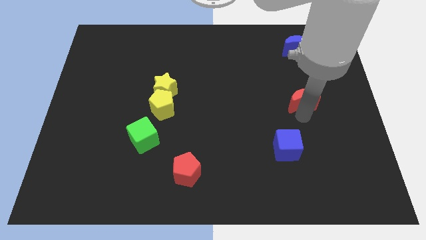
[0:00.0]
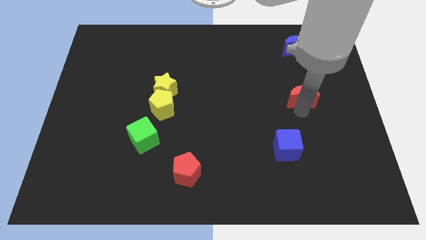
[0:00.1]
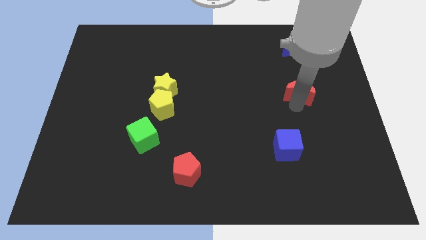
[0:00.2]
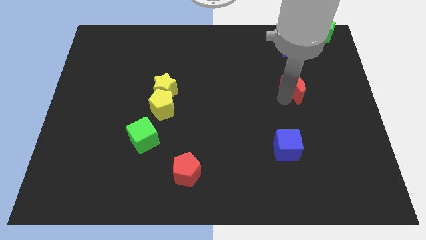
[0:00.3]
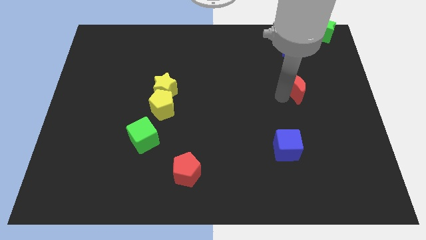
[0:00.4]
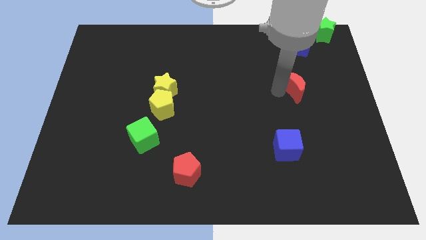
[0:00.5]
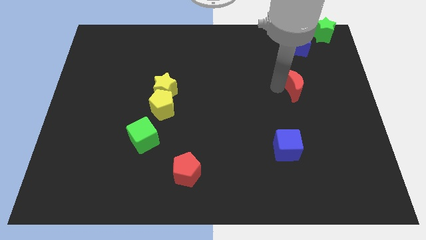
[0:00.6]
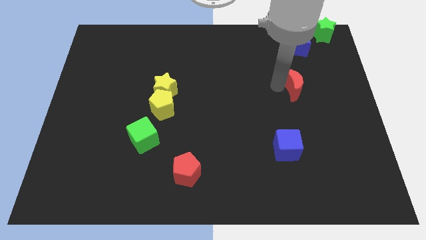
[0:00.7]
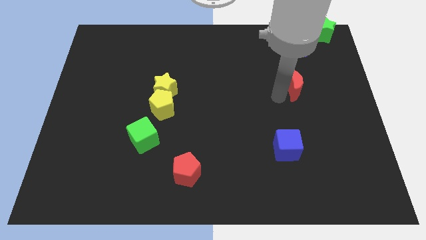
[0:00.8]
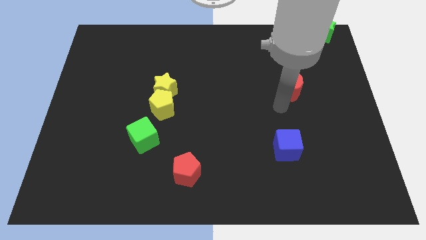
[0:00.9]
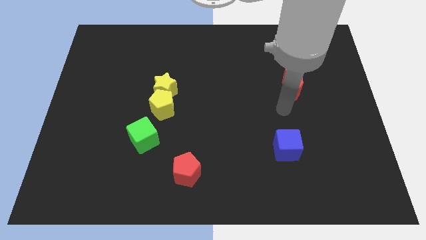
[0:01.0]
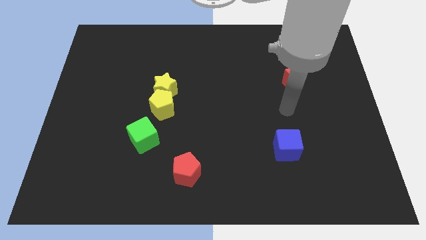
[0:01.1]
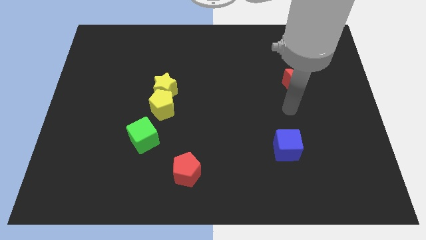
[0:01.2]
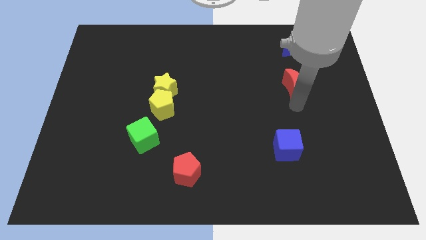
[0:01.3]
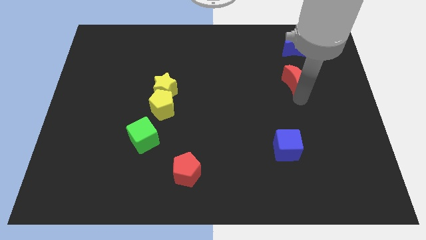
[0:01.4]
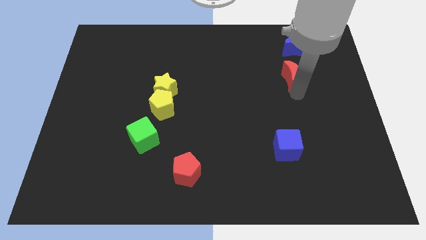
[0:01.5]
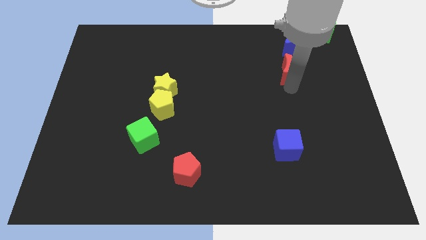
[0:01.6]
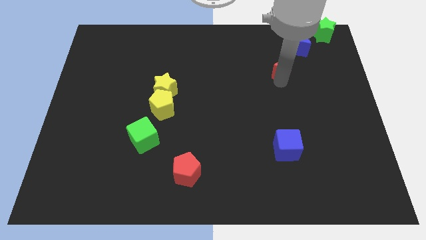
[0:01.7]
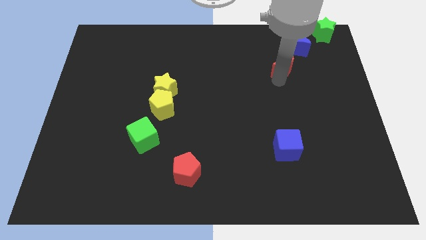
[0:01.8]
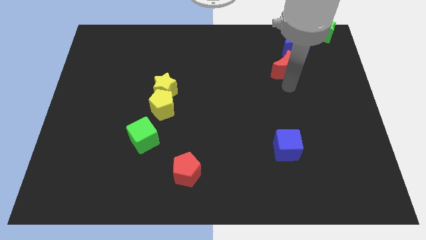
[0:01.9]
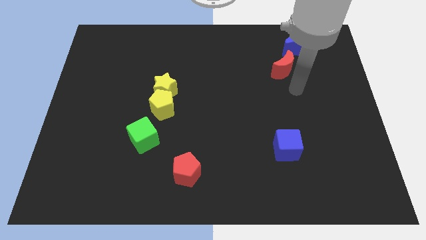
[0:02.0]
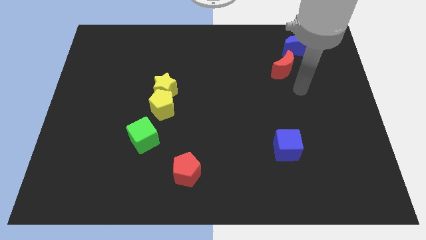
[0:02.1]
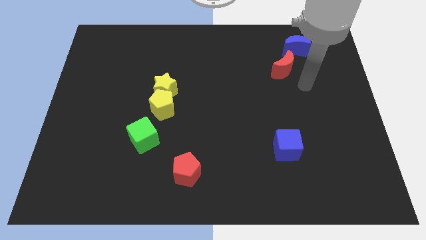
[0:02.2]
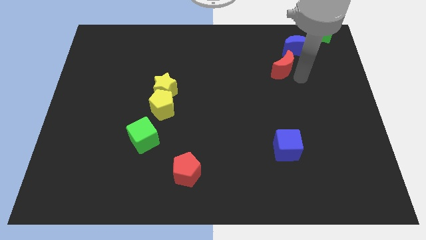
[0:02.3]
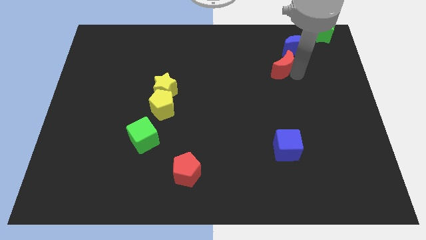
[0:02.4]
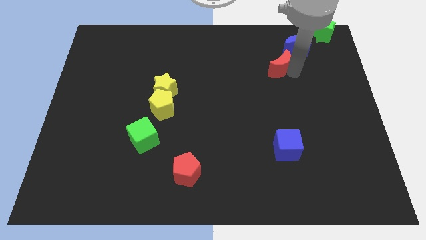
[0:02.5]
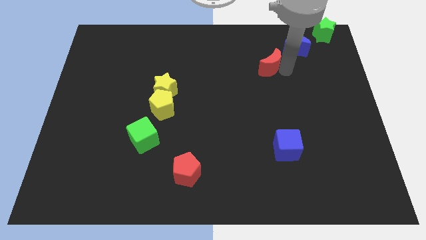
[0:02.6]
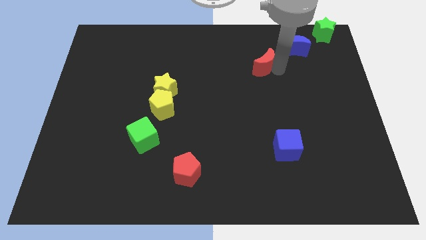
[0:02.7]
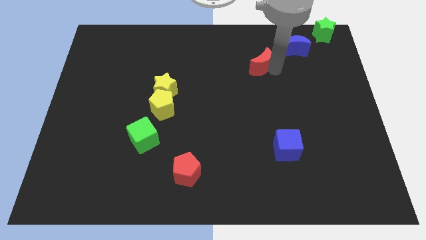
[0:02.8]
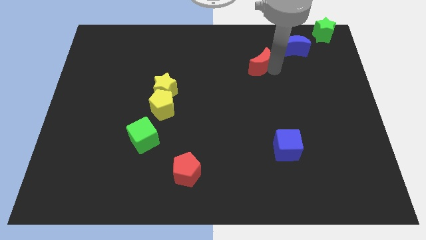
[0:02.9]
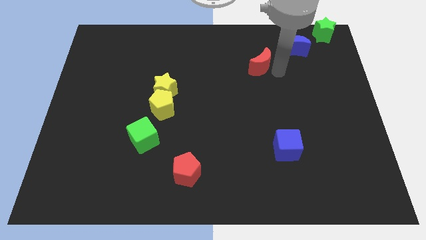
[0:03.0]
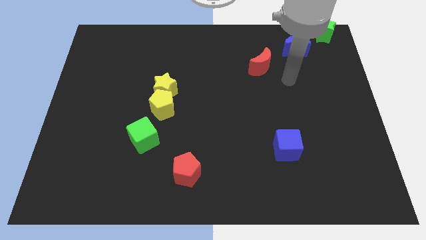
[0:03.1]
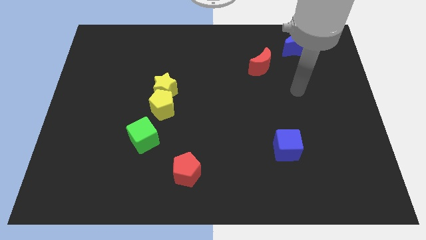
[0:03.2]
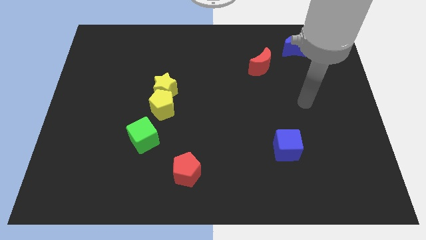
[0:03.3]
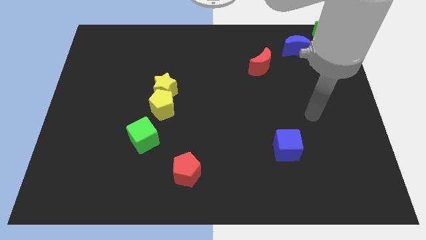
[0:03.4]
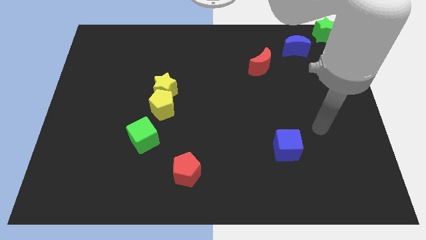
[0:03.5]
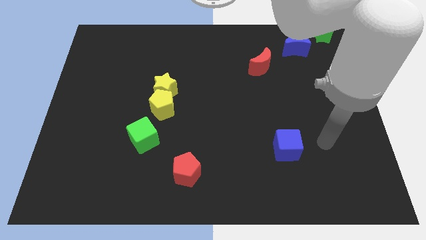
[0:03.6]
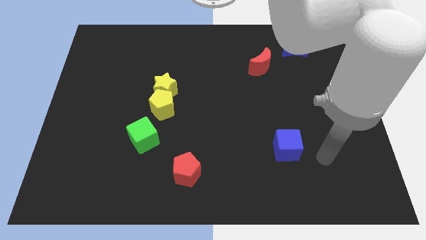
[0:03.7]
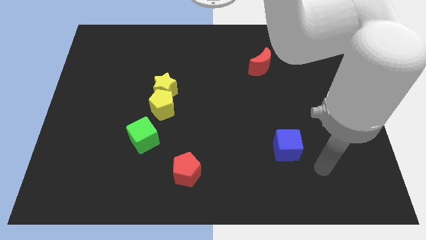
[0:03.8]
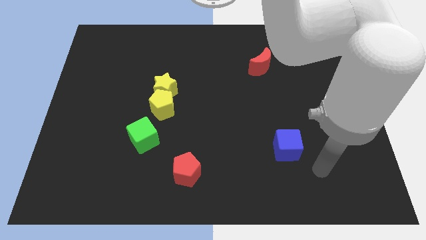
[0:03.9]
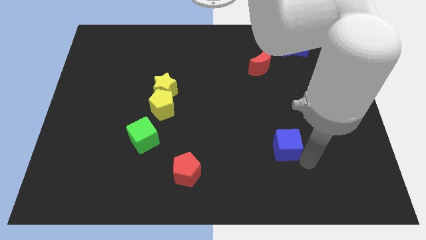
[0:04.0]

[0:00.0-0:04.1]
push the red moon diagonally upwards

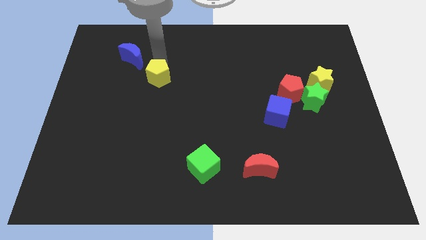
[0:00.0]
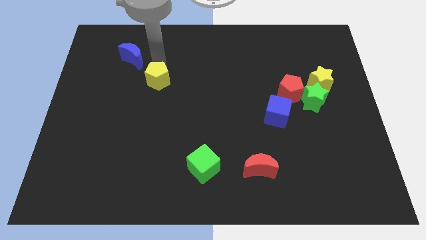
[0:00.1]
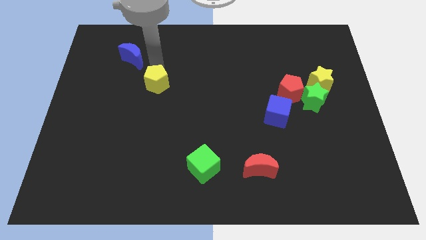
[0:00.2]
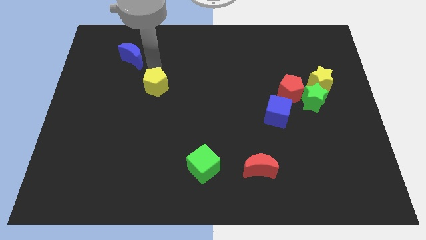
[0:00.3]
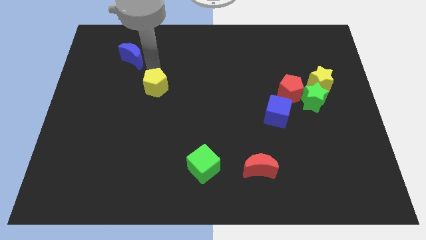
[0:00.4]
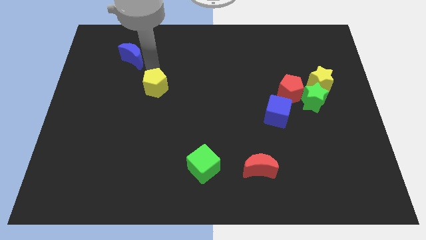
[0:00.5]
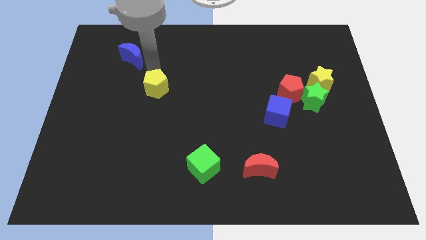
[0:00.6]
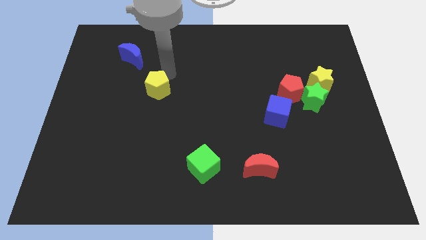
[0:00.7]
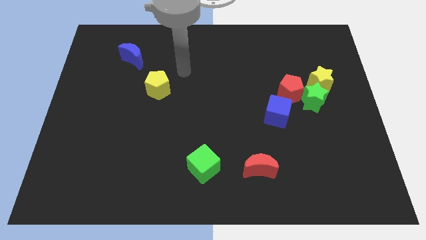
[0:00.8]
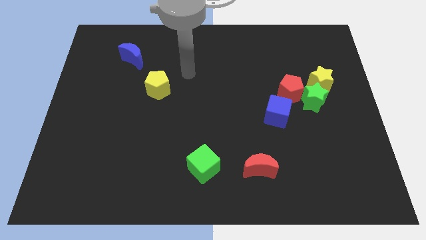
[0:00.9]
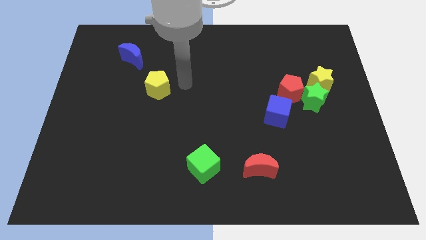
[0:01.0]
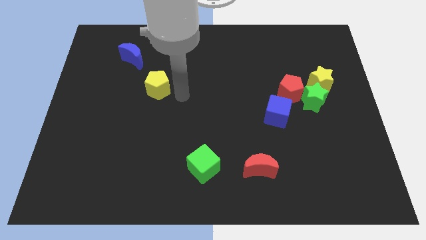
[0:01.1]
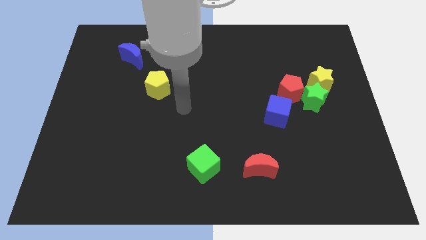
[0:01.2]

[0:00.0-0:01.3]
slightly move down the yellow pentagon towards the center of board

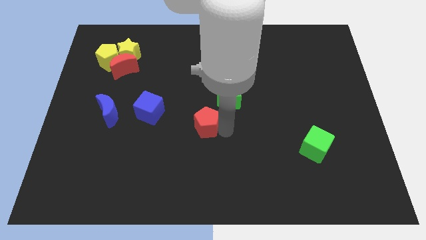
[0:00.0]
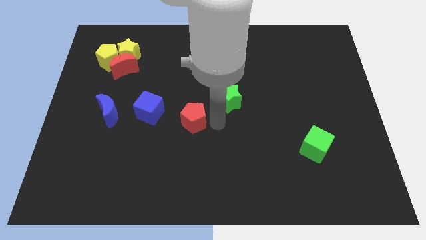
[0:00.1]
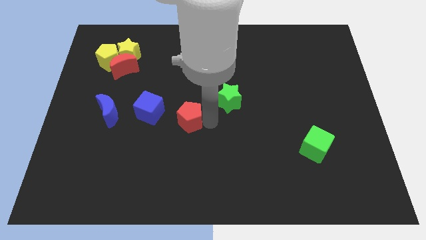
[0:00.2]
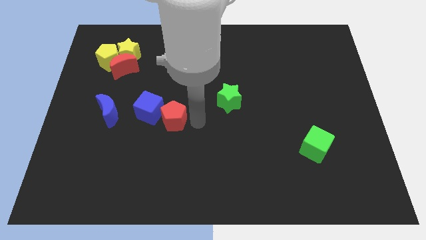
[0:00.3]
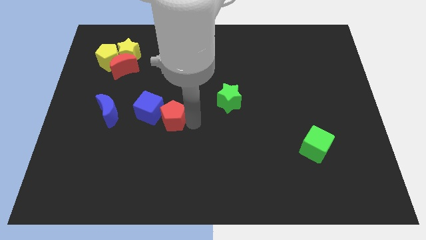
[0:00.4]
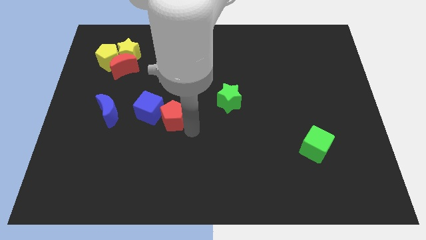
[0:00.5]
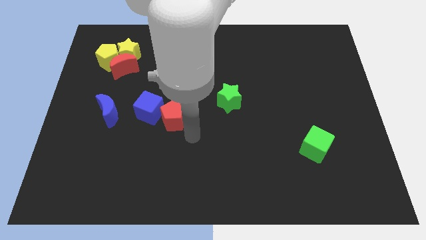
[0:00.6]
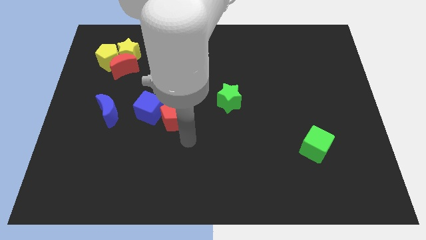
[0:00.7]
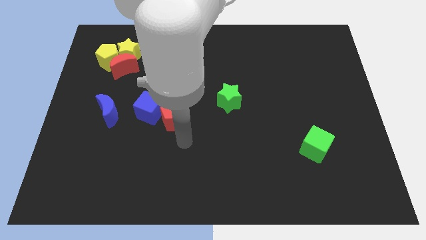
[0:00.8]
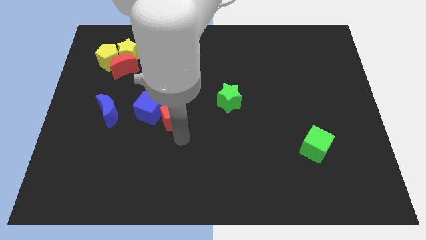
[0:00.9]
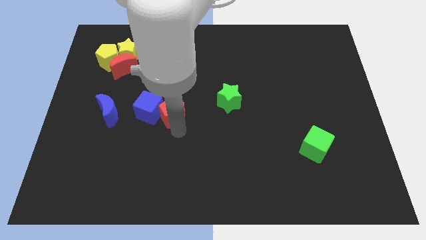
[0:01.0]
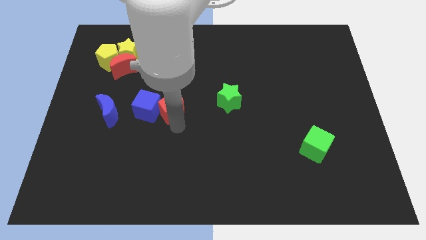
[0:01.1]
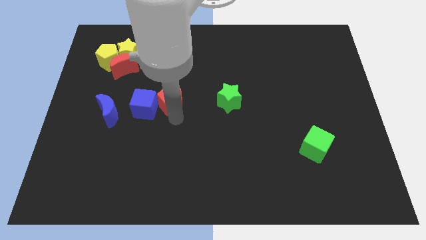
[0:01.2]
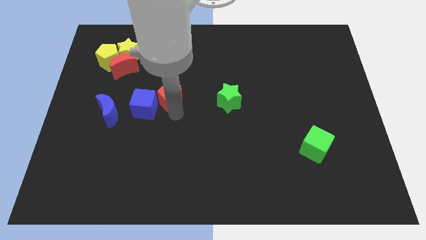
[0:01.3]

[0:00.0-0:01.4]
slide the red pentagon into the blue cube

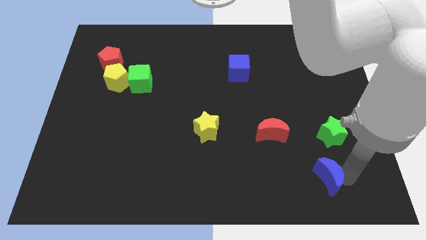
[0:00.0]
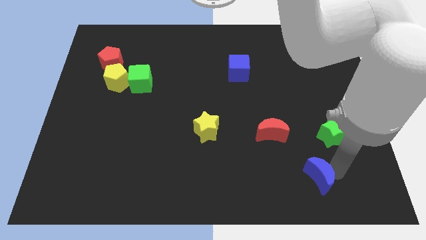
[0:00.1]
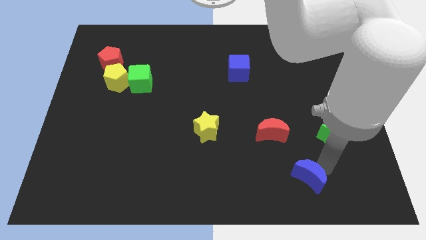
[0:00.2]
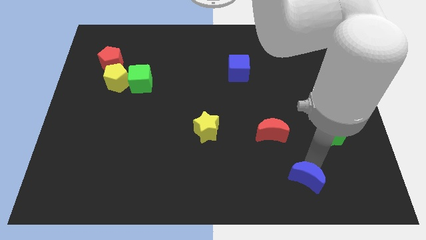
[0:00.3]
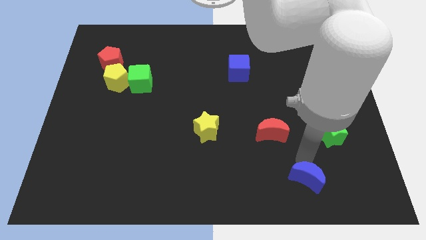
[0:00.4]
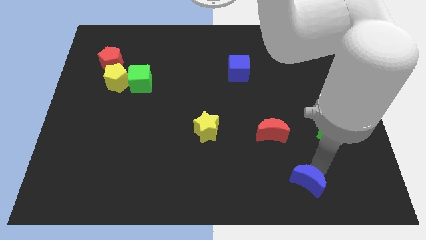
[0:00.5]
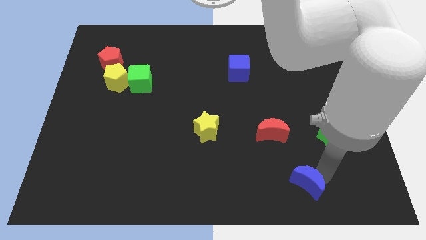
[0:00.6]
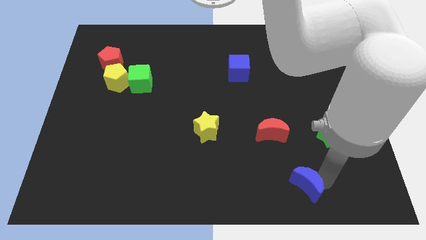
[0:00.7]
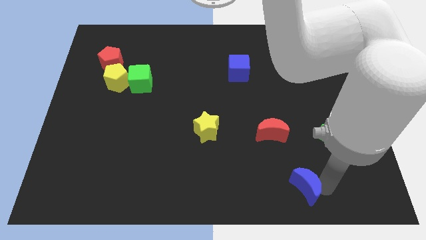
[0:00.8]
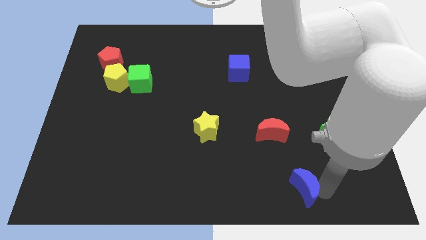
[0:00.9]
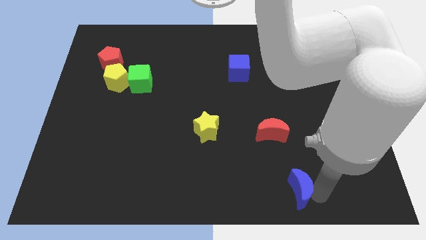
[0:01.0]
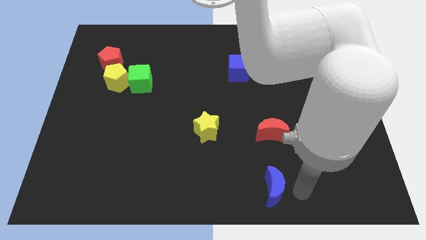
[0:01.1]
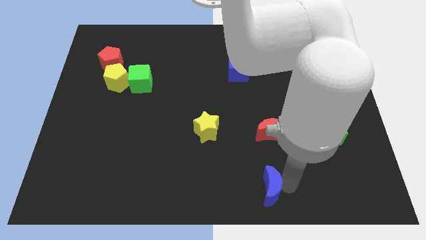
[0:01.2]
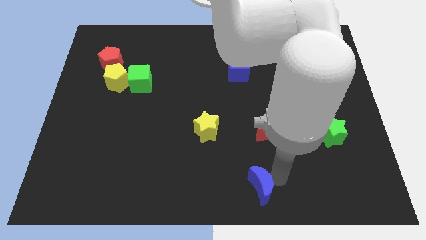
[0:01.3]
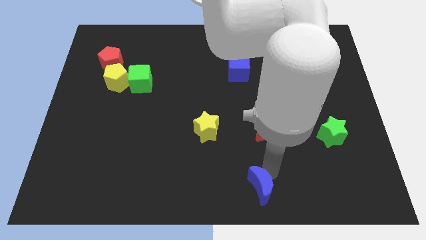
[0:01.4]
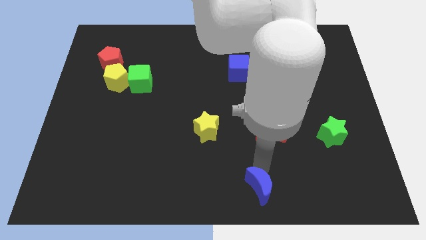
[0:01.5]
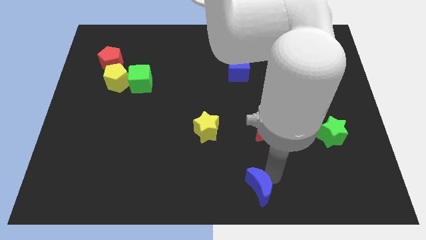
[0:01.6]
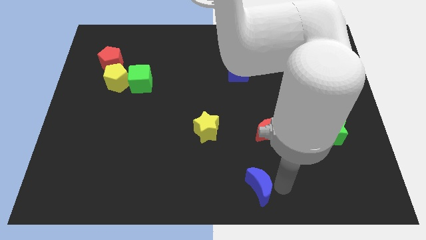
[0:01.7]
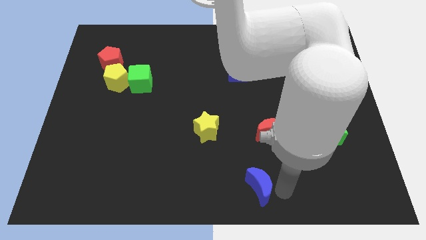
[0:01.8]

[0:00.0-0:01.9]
push the blue crescent towards the bottom center

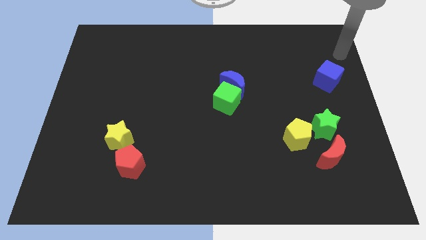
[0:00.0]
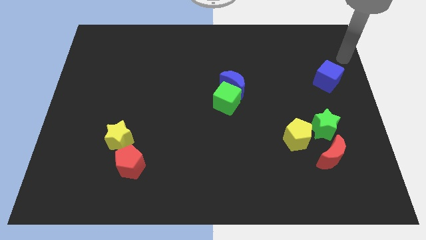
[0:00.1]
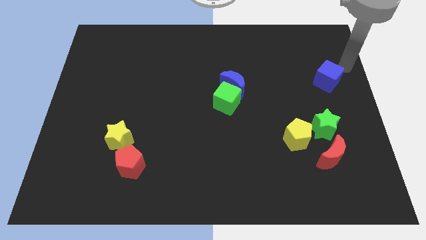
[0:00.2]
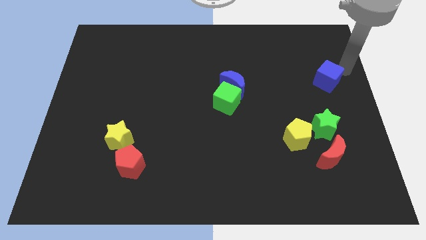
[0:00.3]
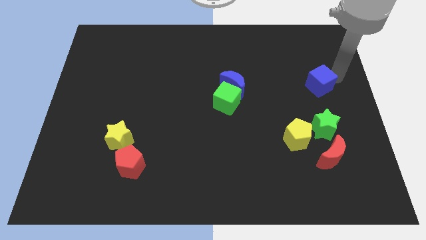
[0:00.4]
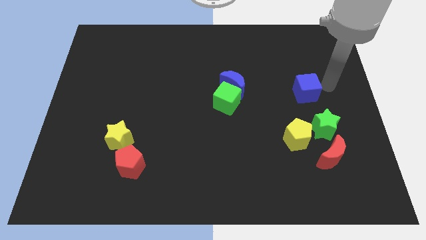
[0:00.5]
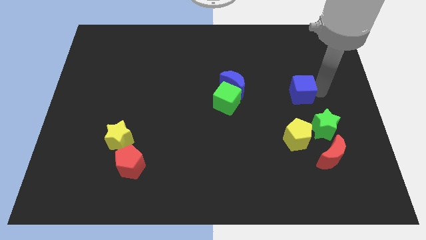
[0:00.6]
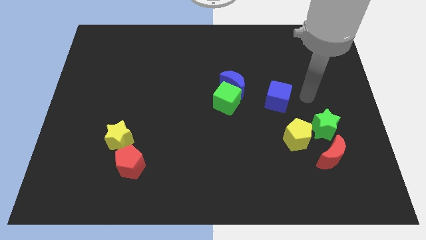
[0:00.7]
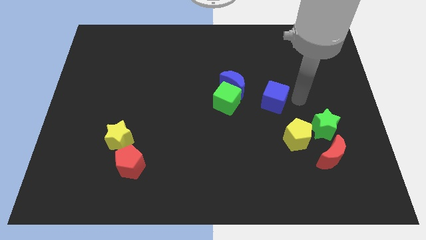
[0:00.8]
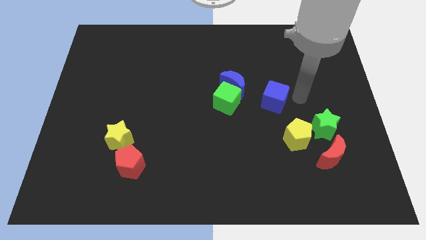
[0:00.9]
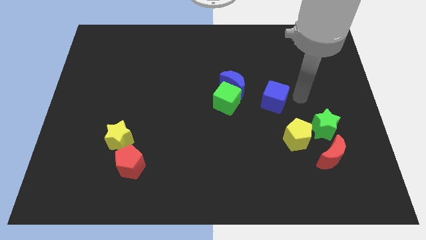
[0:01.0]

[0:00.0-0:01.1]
push blue cube towards green cube
